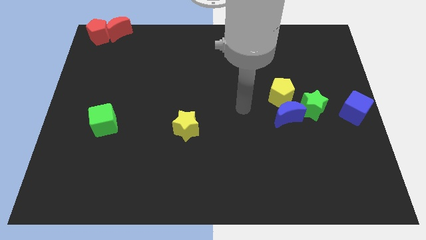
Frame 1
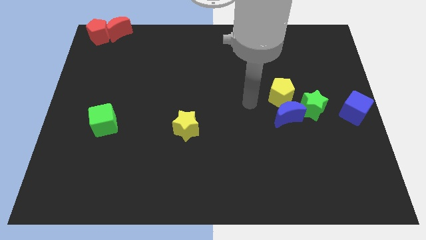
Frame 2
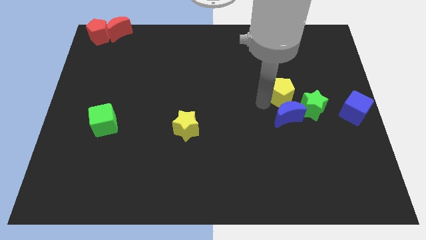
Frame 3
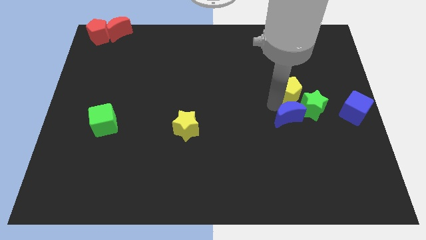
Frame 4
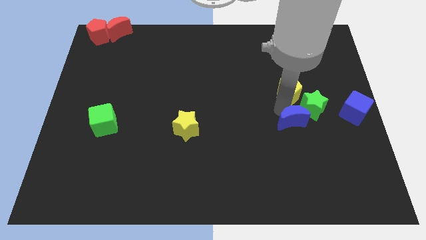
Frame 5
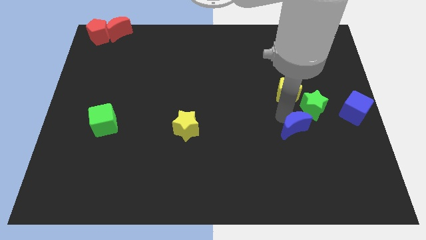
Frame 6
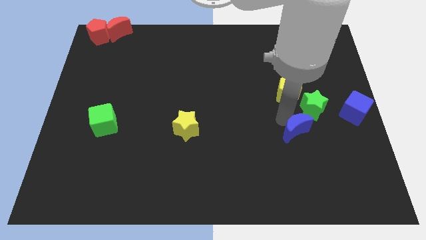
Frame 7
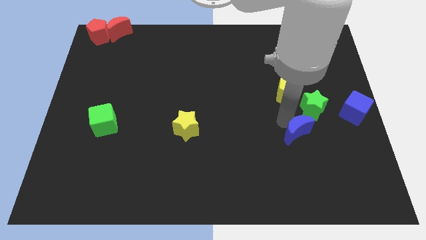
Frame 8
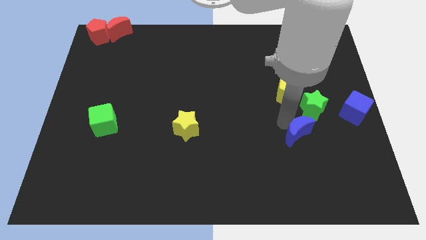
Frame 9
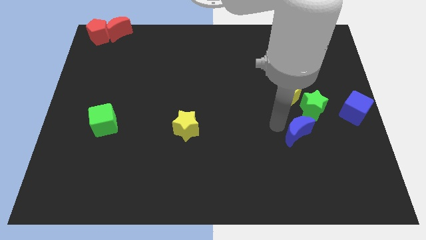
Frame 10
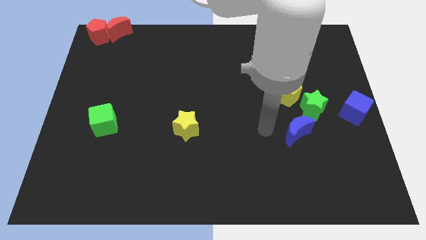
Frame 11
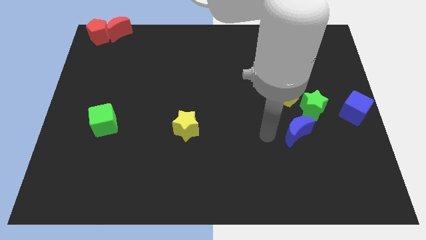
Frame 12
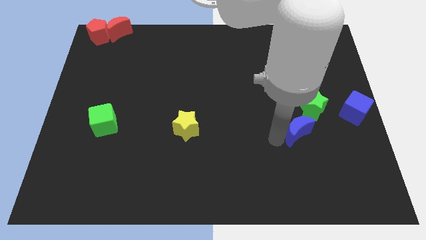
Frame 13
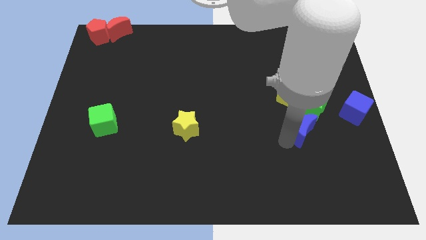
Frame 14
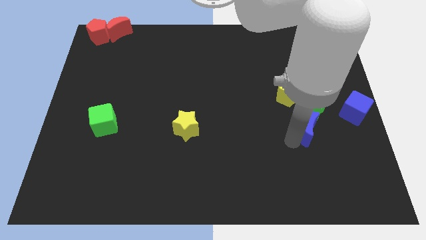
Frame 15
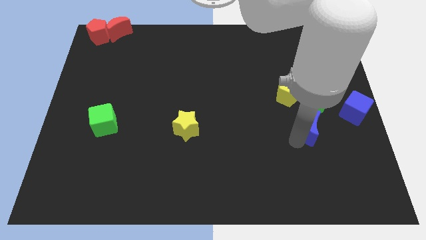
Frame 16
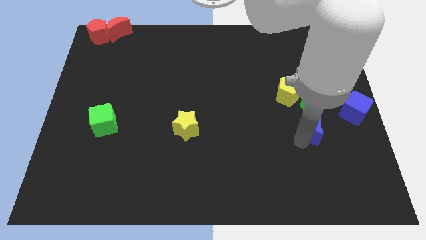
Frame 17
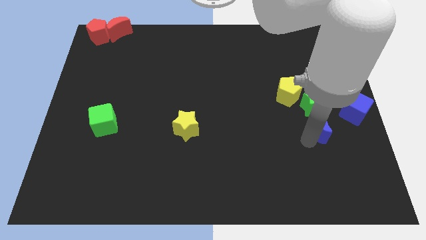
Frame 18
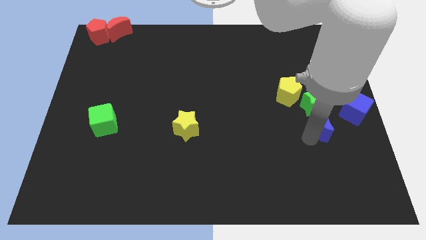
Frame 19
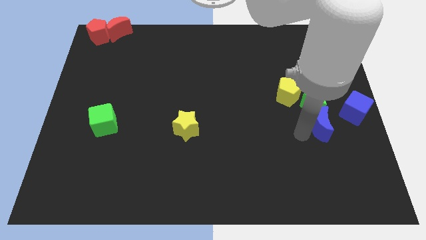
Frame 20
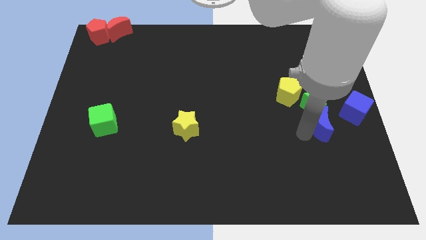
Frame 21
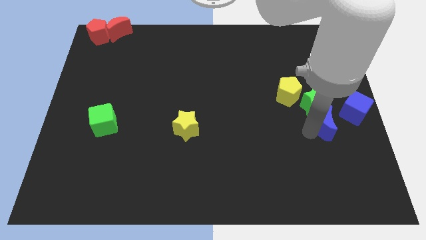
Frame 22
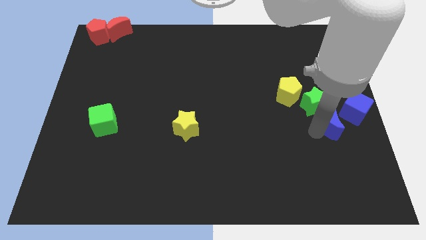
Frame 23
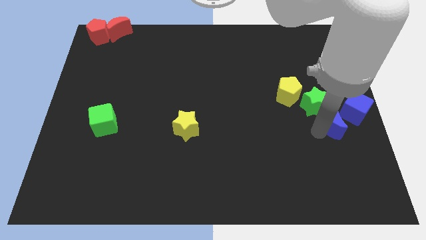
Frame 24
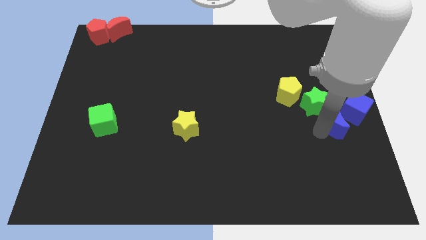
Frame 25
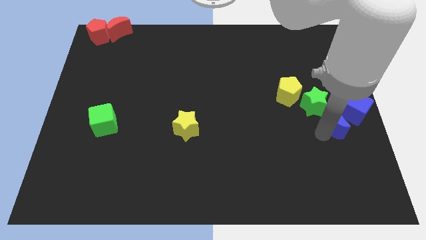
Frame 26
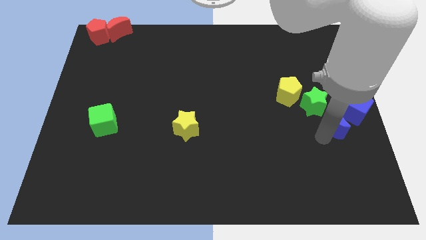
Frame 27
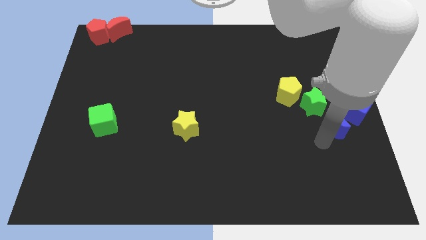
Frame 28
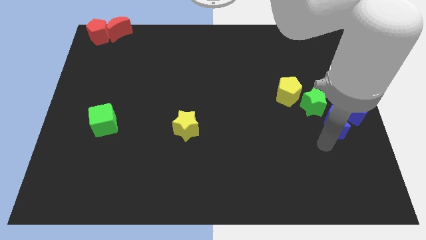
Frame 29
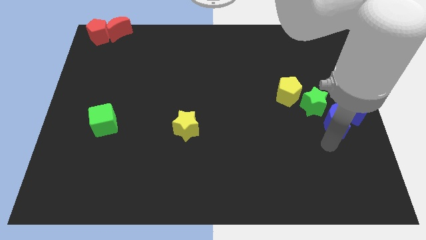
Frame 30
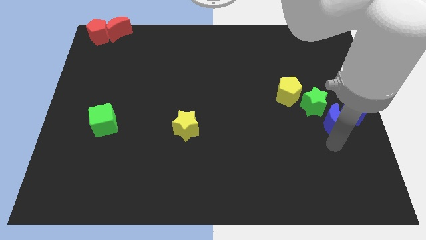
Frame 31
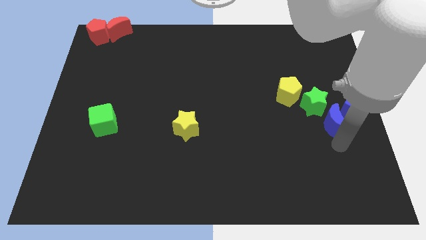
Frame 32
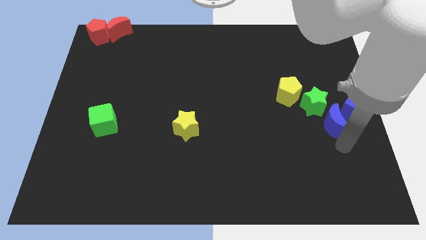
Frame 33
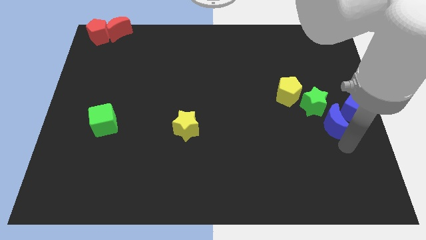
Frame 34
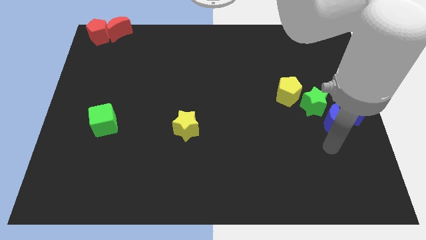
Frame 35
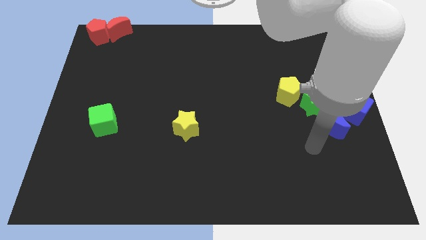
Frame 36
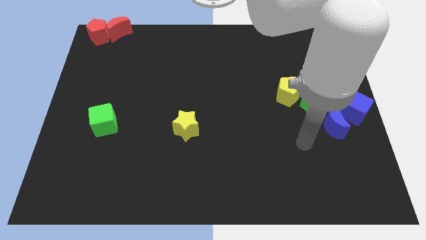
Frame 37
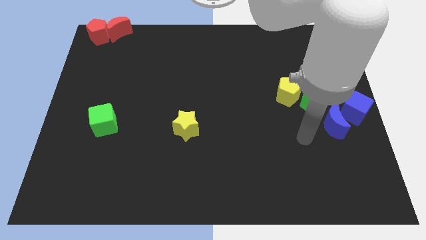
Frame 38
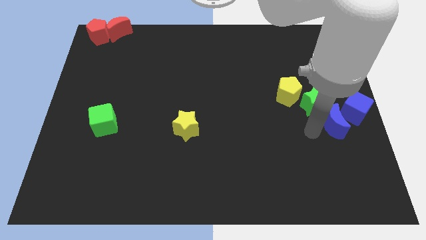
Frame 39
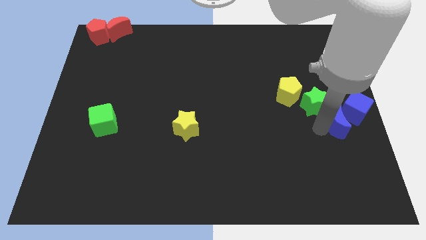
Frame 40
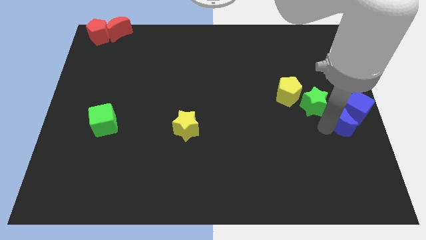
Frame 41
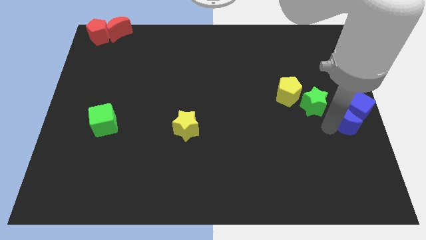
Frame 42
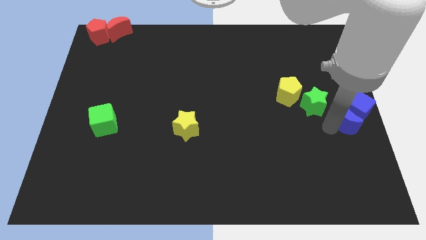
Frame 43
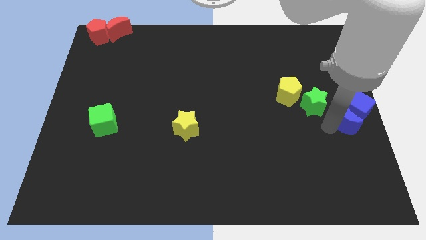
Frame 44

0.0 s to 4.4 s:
push the blue moon into blue cube

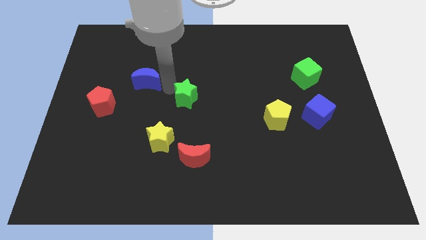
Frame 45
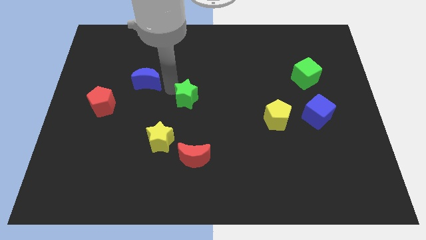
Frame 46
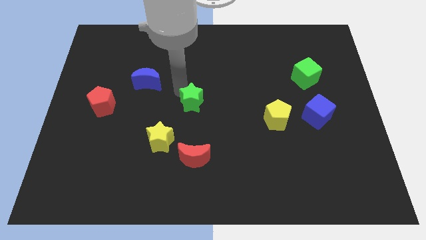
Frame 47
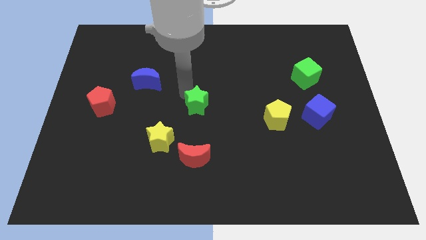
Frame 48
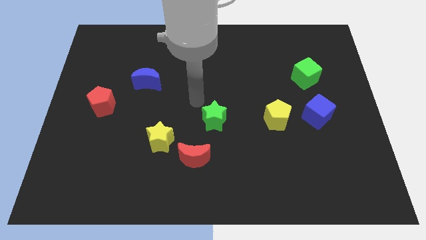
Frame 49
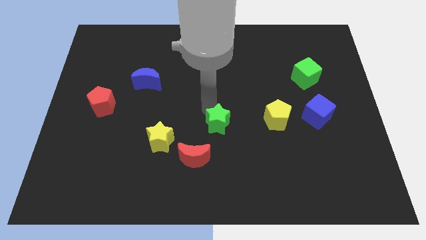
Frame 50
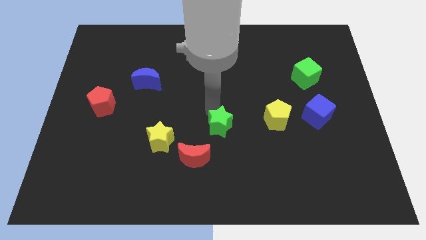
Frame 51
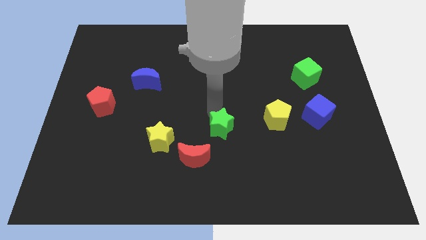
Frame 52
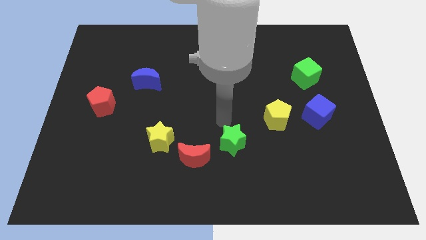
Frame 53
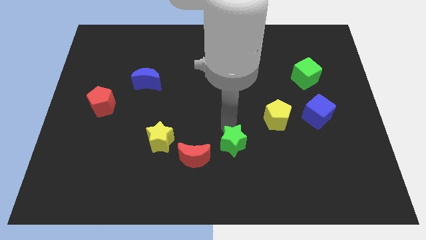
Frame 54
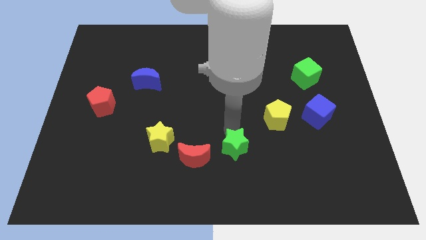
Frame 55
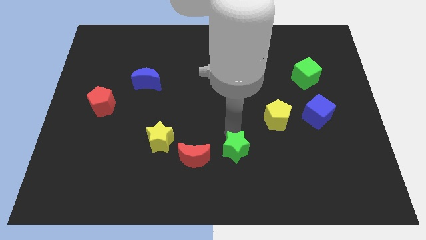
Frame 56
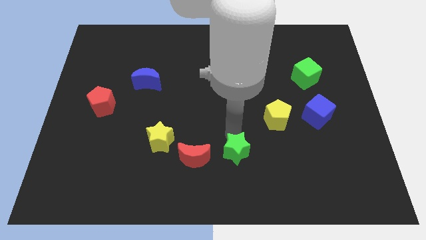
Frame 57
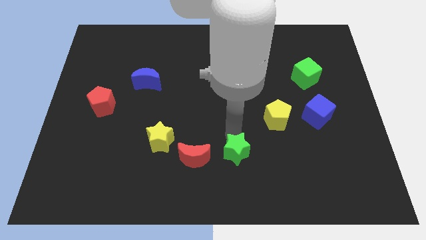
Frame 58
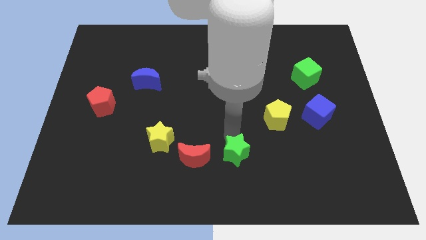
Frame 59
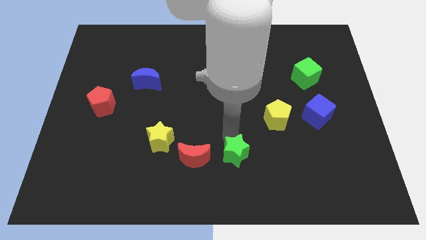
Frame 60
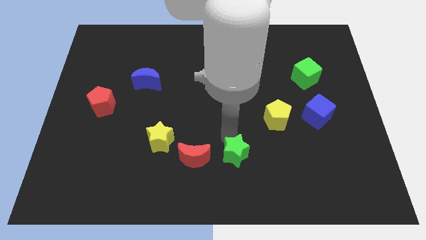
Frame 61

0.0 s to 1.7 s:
place the green star to the right of the red crescent

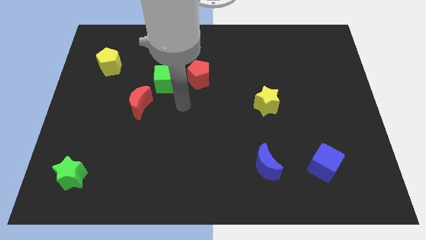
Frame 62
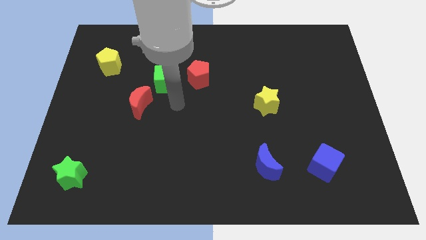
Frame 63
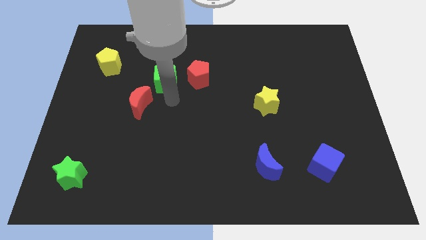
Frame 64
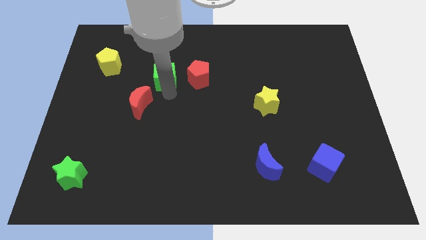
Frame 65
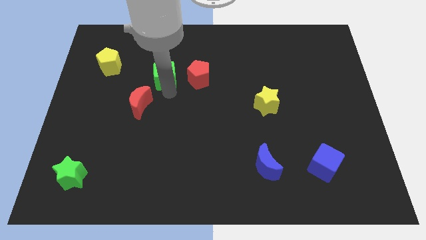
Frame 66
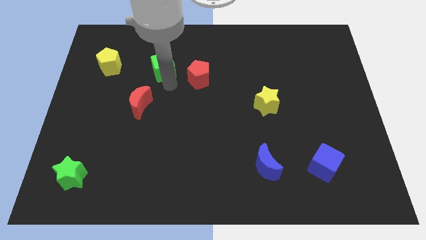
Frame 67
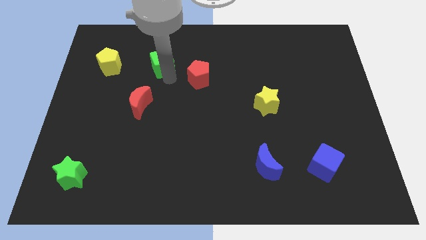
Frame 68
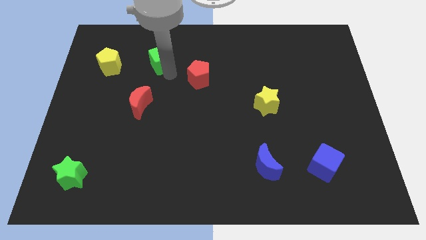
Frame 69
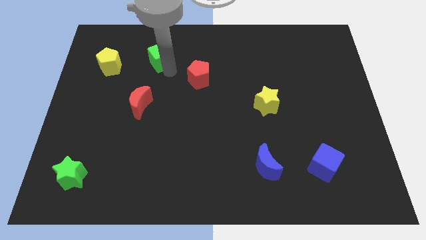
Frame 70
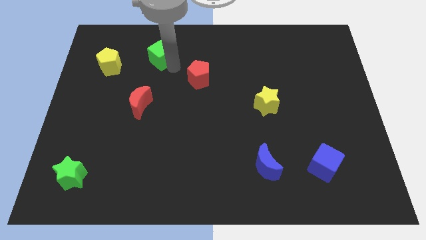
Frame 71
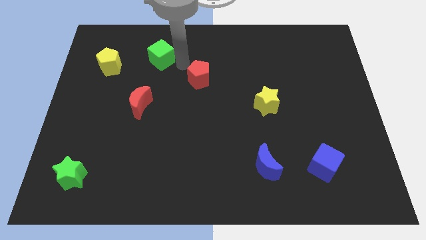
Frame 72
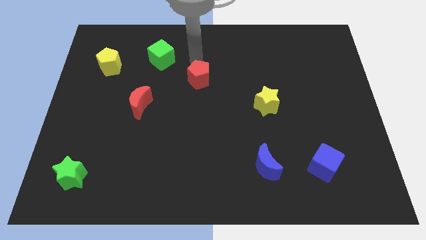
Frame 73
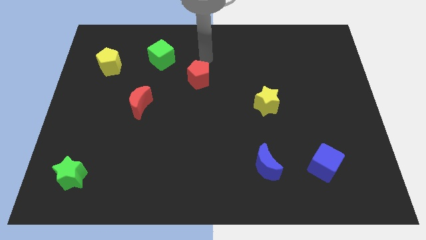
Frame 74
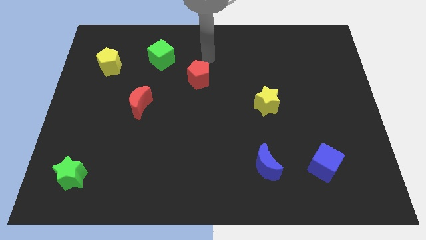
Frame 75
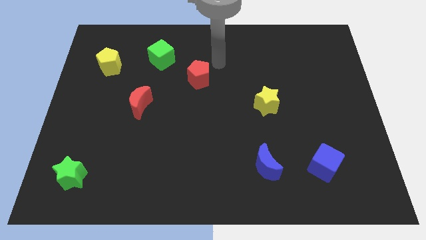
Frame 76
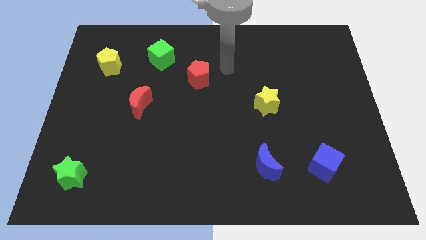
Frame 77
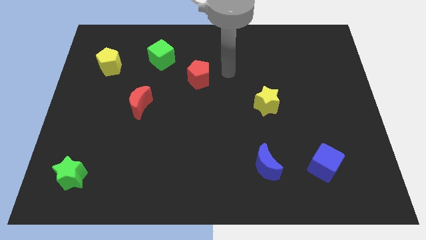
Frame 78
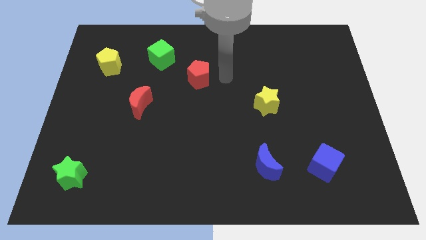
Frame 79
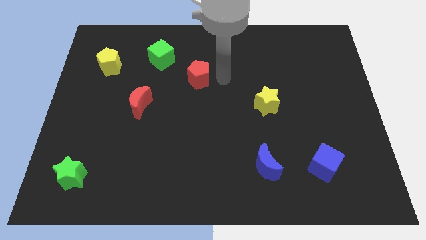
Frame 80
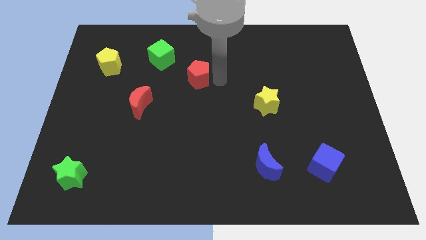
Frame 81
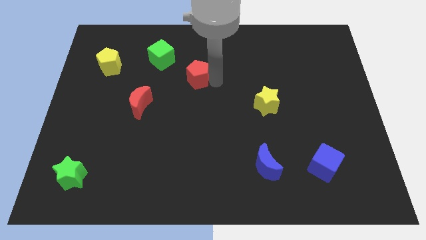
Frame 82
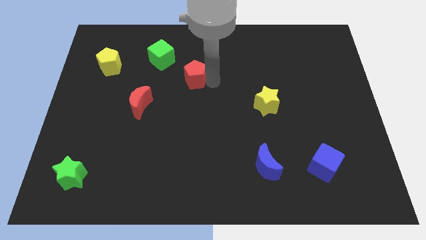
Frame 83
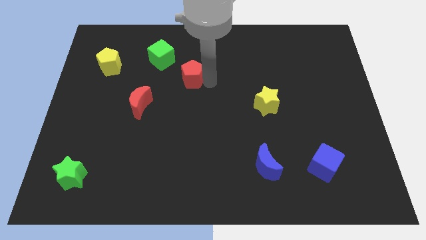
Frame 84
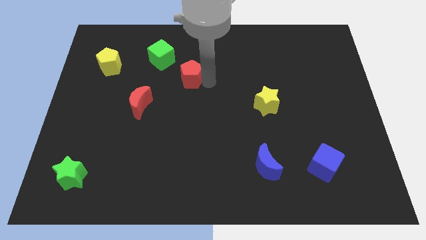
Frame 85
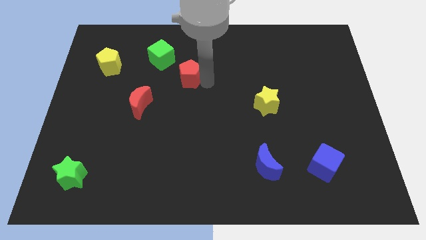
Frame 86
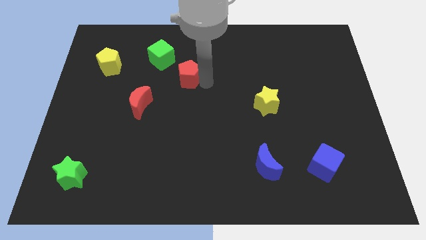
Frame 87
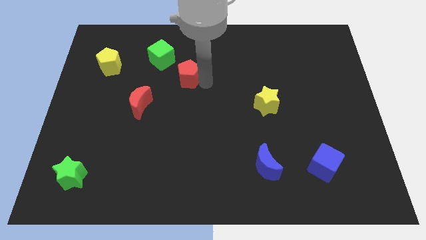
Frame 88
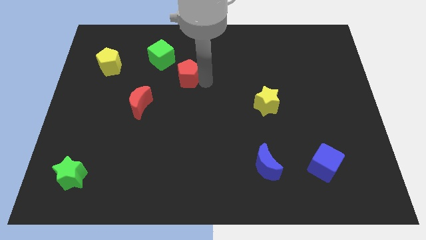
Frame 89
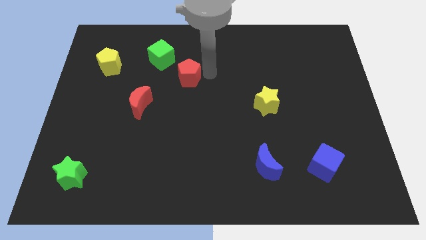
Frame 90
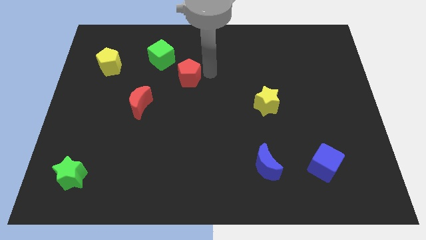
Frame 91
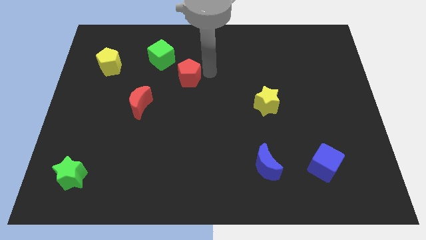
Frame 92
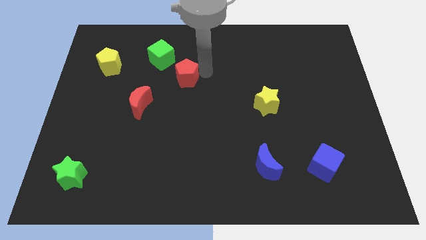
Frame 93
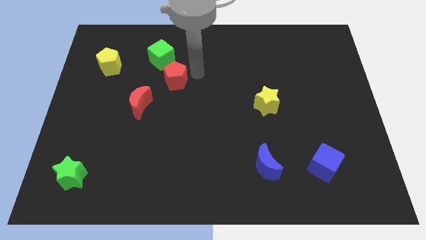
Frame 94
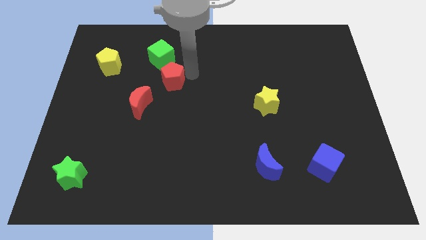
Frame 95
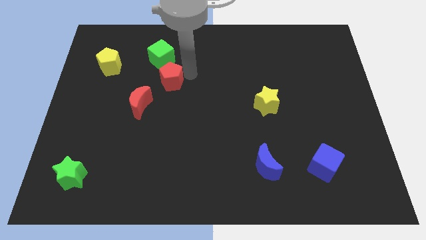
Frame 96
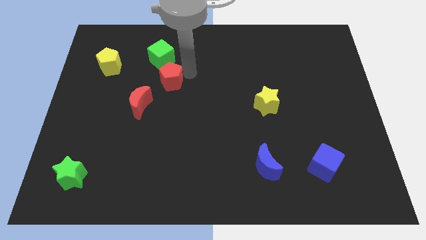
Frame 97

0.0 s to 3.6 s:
place the green cube to to right side of yellow pentagon
